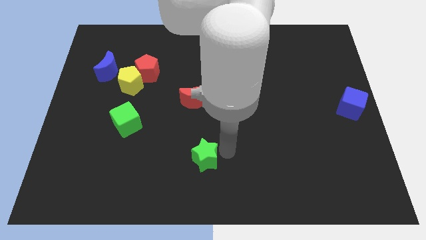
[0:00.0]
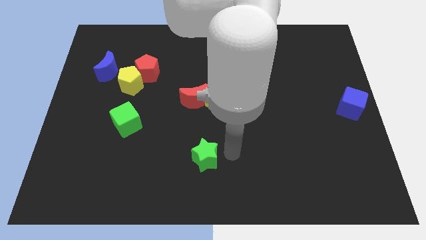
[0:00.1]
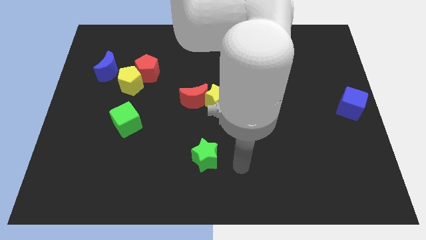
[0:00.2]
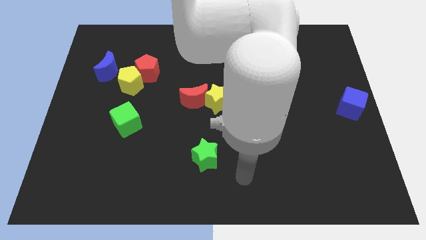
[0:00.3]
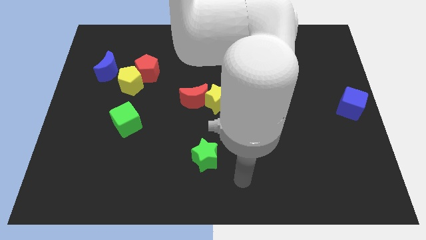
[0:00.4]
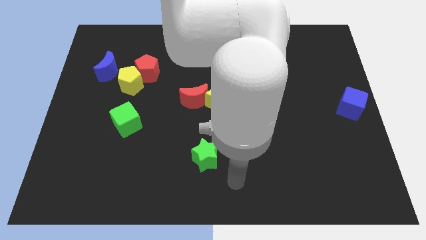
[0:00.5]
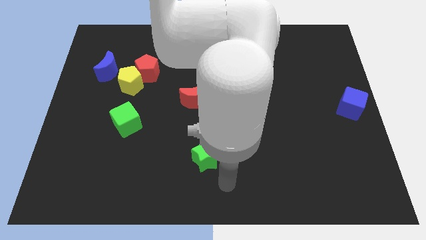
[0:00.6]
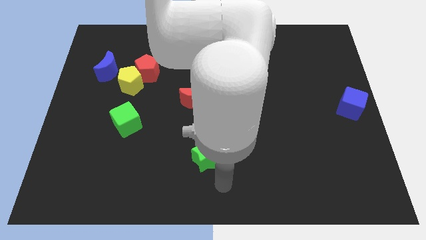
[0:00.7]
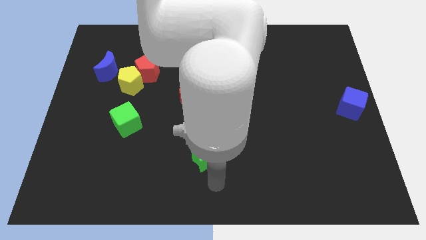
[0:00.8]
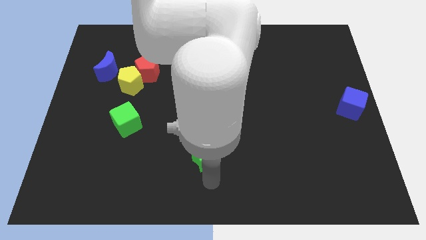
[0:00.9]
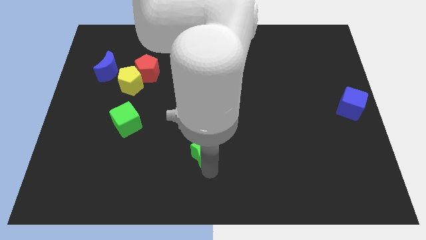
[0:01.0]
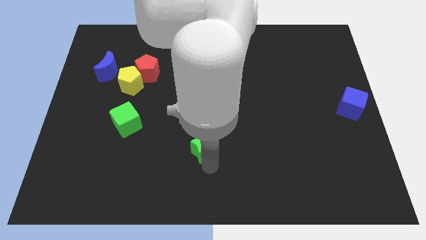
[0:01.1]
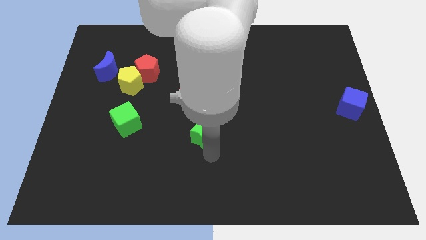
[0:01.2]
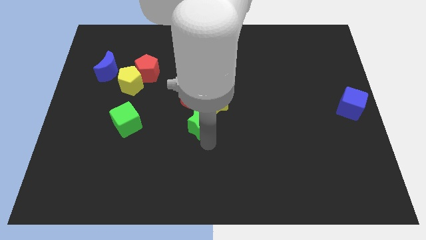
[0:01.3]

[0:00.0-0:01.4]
drag the green star slightly upwards

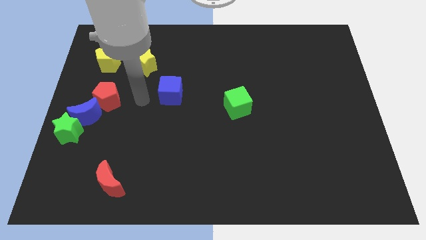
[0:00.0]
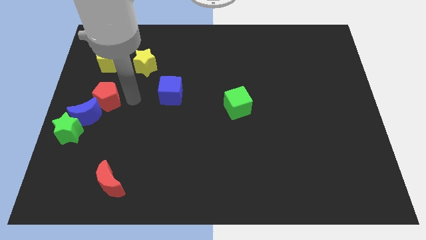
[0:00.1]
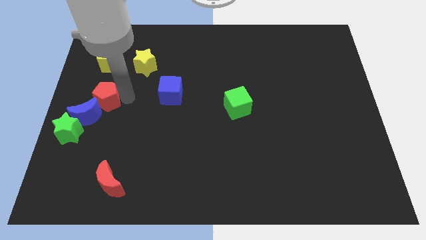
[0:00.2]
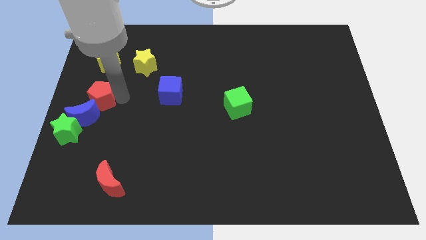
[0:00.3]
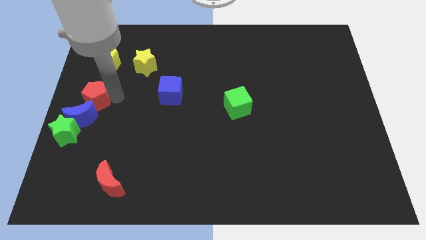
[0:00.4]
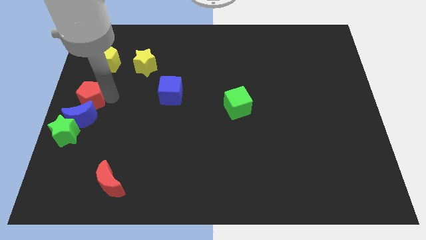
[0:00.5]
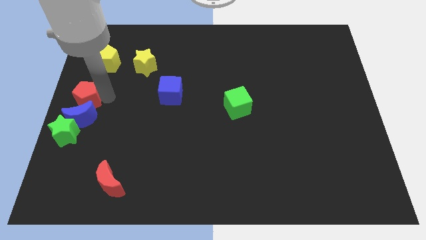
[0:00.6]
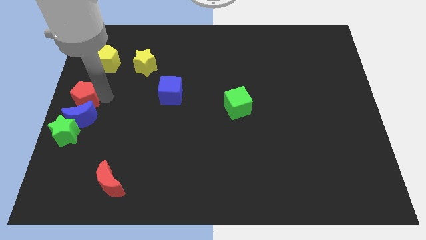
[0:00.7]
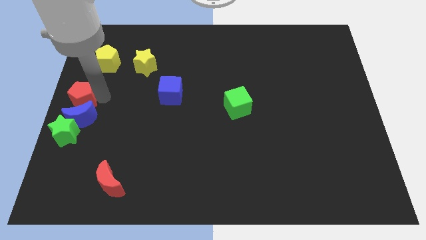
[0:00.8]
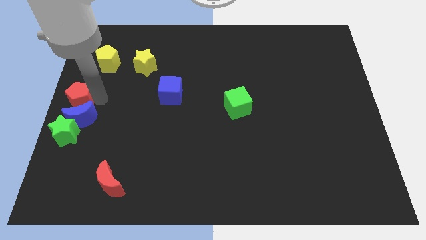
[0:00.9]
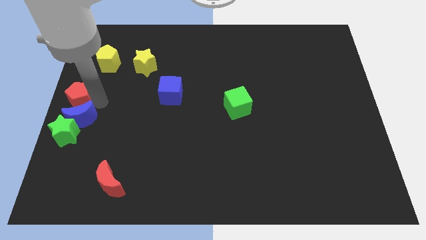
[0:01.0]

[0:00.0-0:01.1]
move the red pentagon above the blue crescent

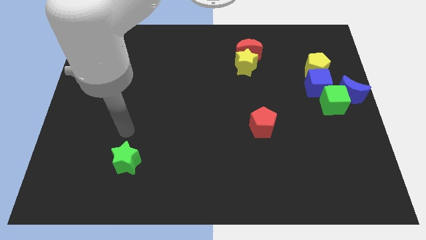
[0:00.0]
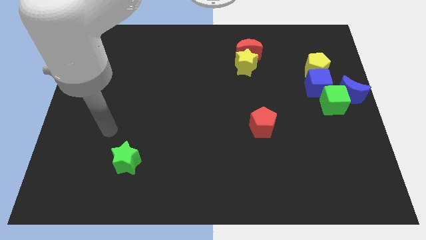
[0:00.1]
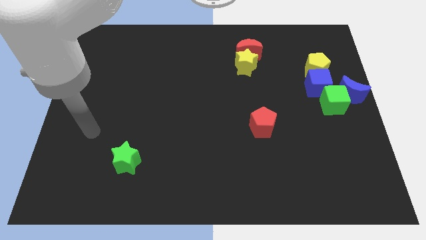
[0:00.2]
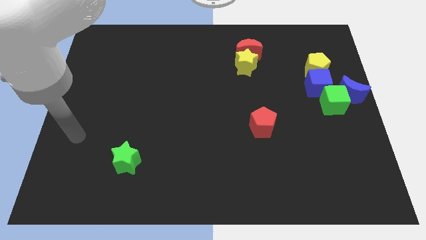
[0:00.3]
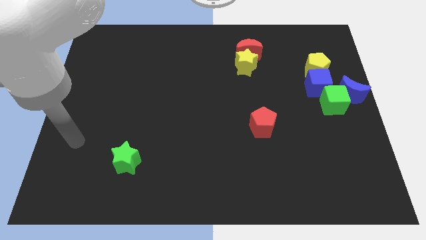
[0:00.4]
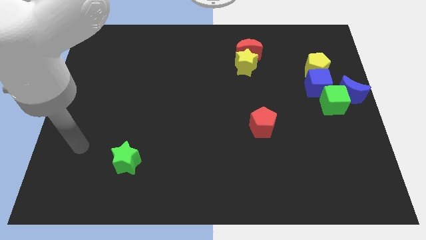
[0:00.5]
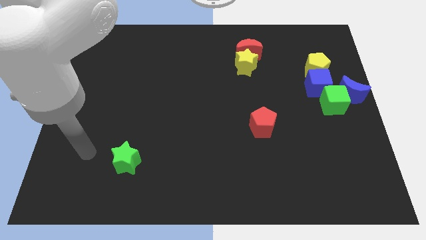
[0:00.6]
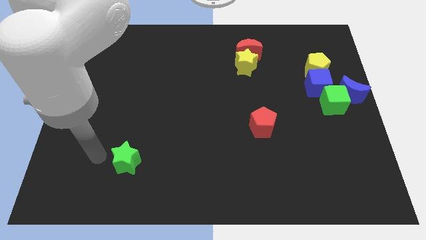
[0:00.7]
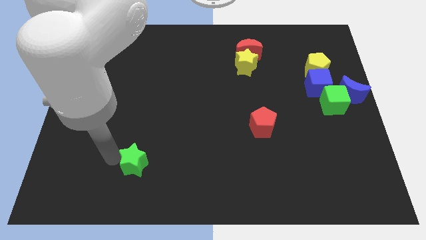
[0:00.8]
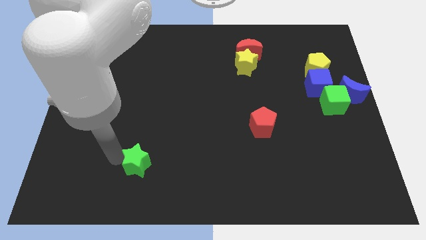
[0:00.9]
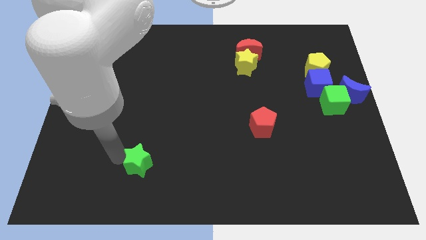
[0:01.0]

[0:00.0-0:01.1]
slightly push the green star towards the right

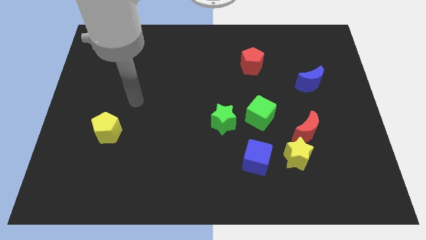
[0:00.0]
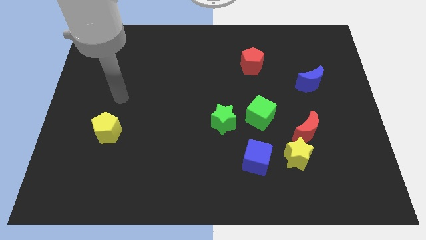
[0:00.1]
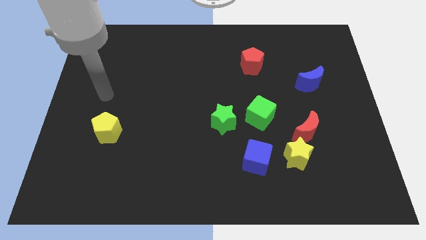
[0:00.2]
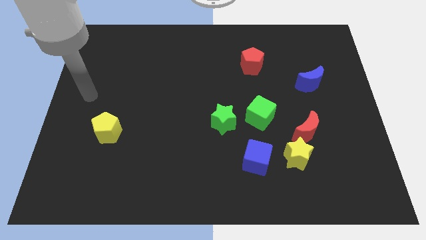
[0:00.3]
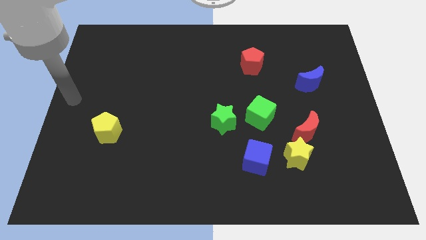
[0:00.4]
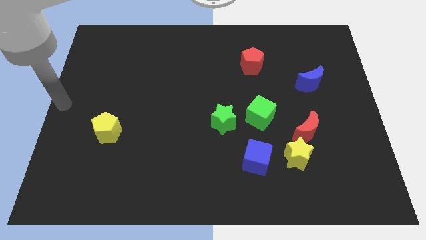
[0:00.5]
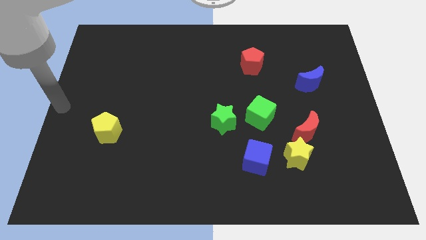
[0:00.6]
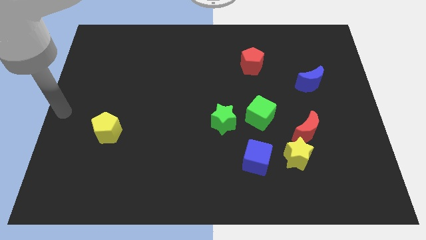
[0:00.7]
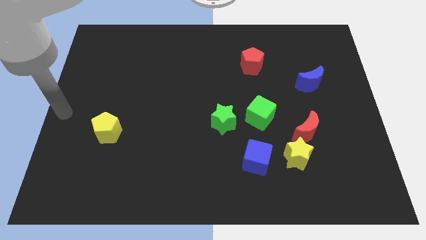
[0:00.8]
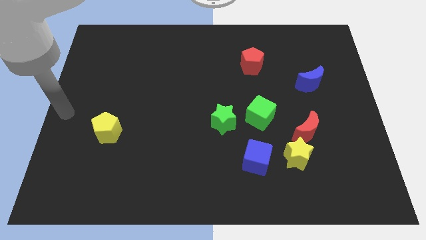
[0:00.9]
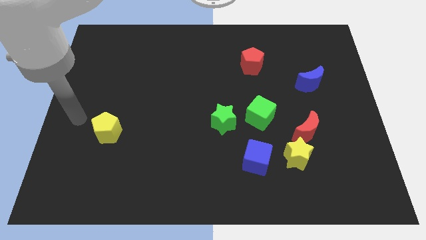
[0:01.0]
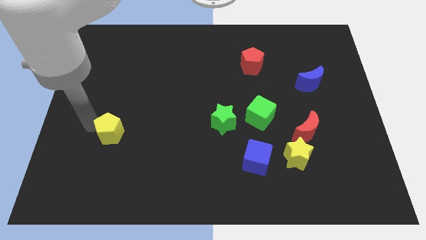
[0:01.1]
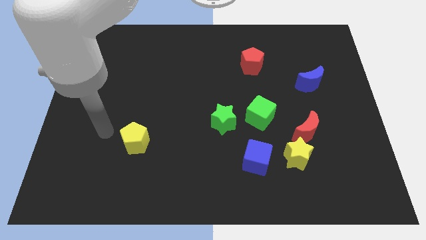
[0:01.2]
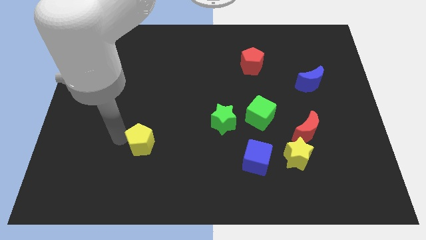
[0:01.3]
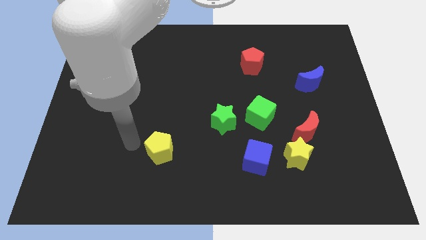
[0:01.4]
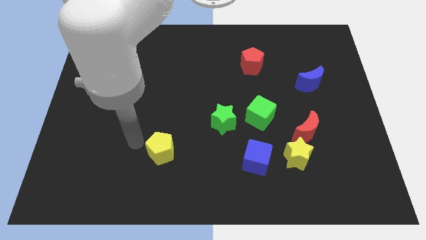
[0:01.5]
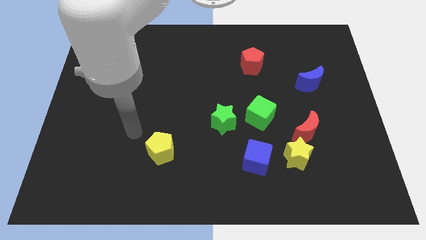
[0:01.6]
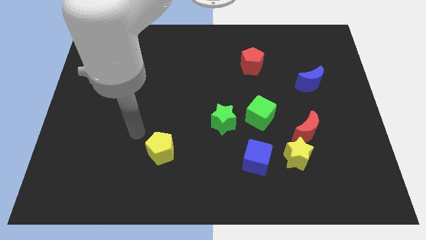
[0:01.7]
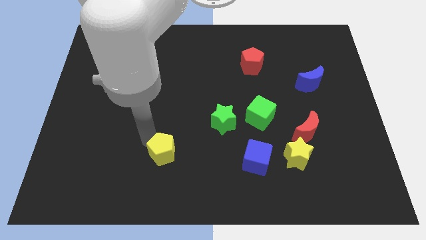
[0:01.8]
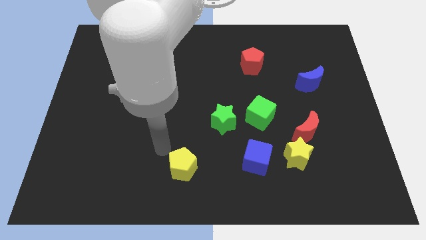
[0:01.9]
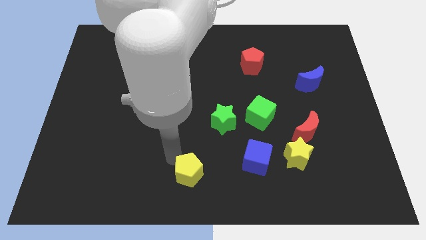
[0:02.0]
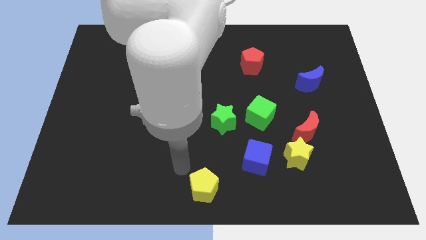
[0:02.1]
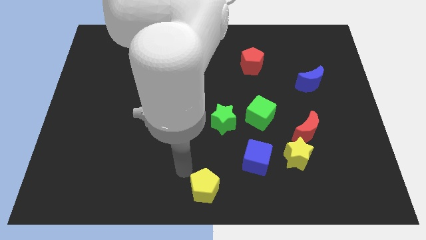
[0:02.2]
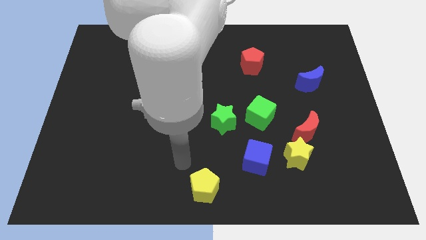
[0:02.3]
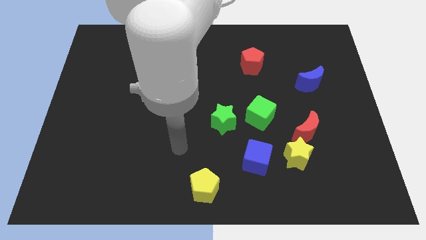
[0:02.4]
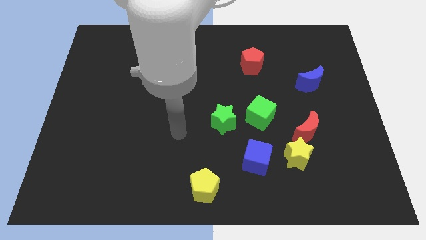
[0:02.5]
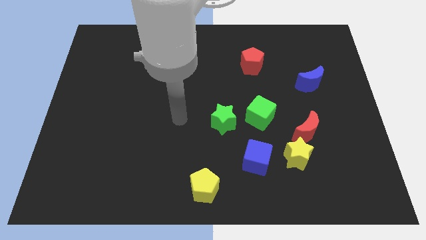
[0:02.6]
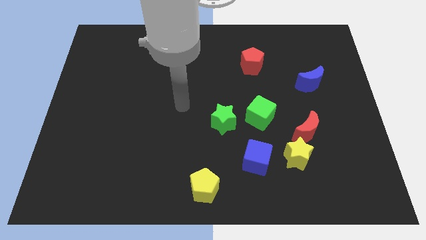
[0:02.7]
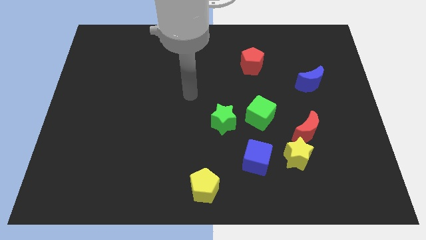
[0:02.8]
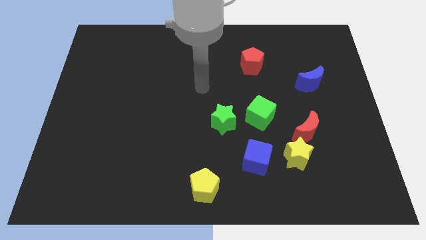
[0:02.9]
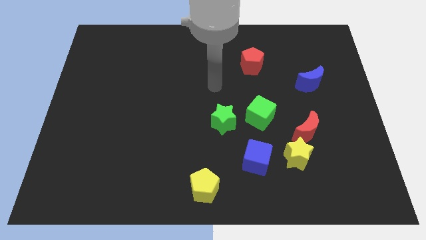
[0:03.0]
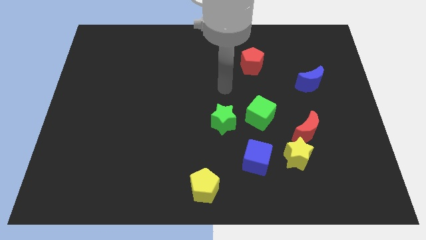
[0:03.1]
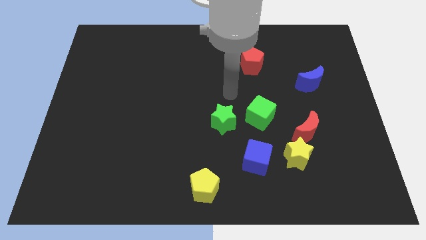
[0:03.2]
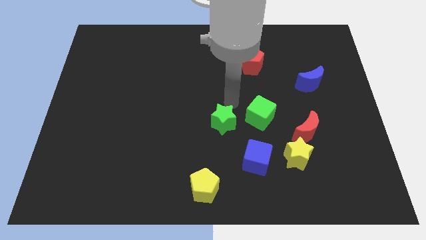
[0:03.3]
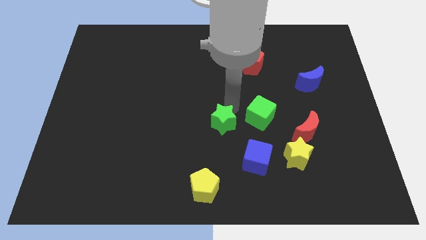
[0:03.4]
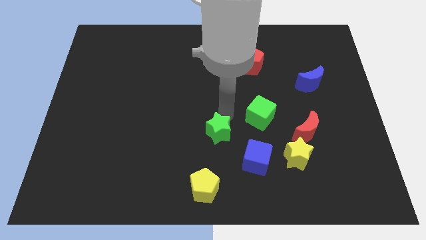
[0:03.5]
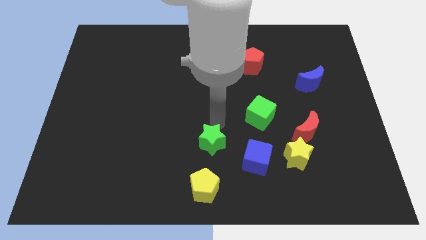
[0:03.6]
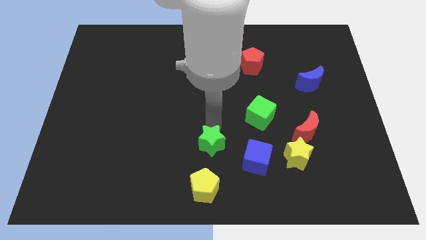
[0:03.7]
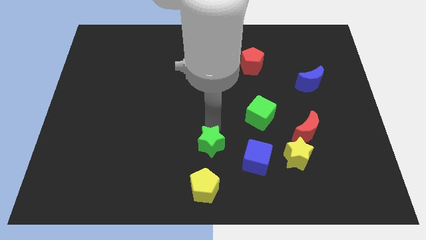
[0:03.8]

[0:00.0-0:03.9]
move green star towards yellow pentagon

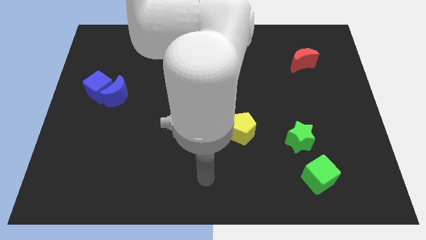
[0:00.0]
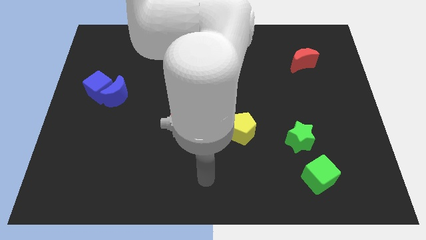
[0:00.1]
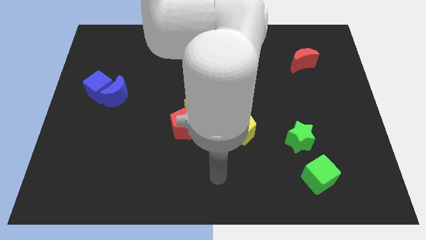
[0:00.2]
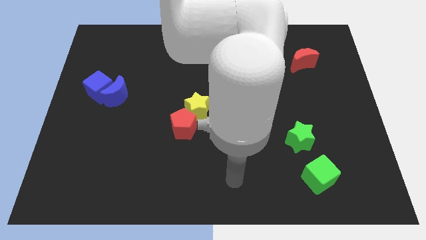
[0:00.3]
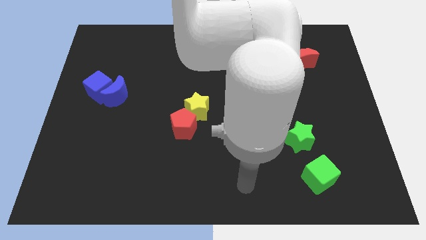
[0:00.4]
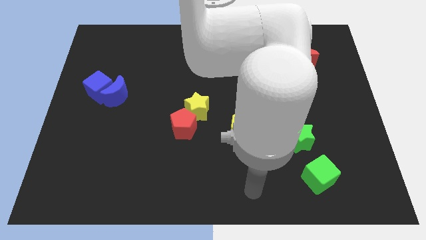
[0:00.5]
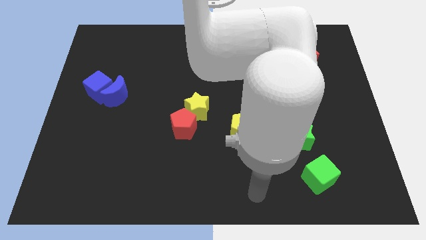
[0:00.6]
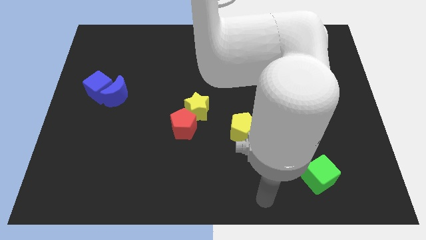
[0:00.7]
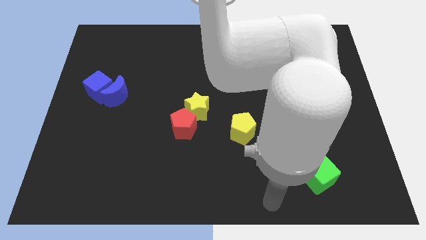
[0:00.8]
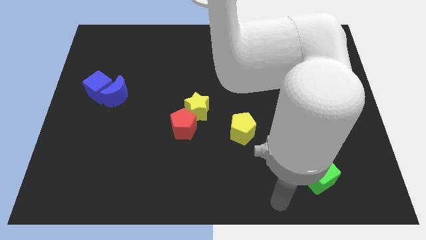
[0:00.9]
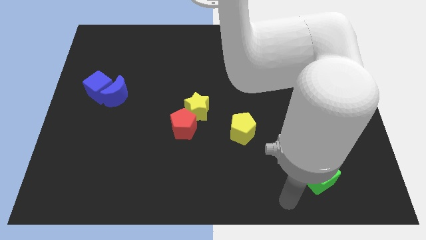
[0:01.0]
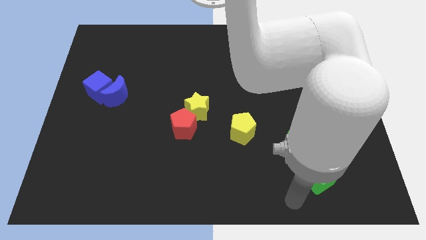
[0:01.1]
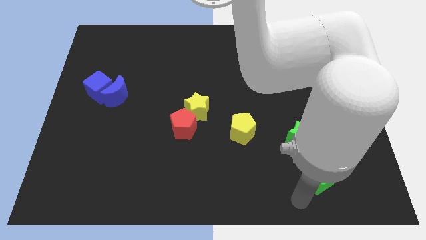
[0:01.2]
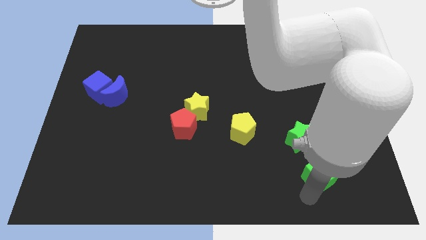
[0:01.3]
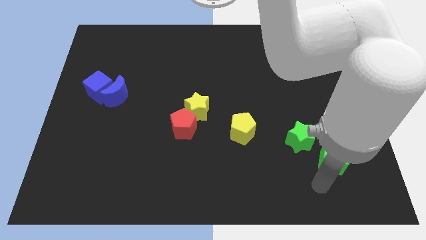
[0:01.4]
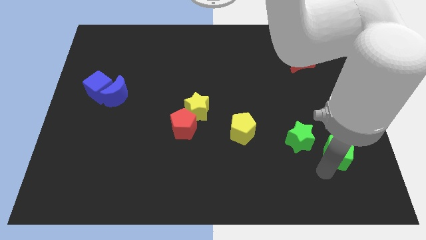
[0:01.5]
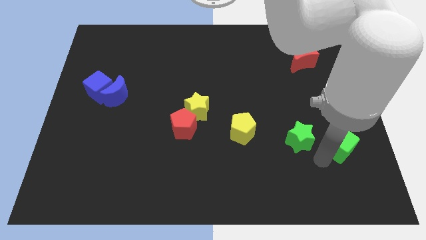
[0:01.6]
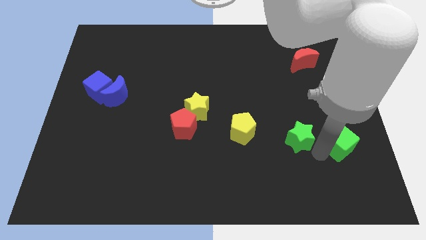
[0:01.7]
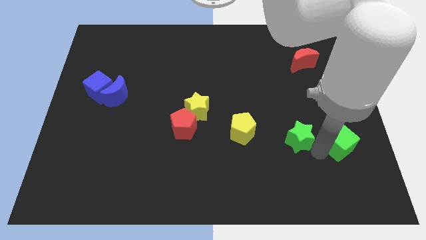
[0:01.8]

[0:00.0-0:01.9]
place the green cube to the right of the green star
